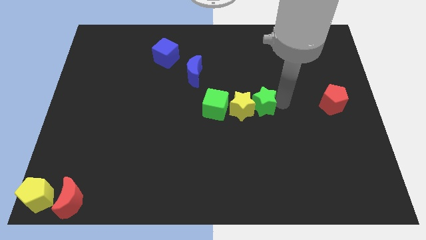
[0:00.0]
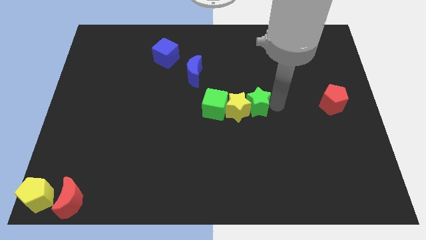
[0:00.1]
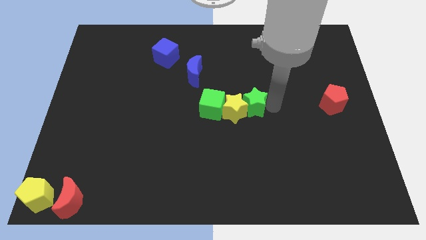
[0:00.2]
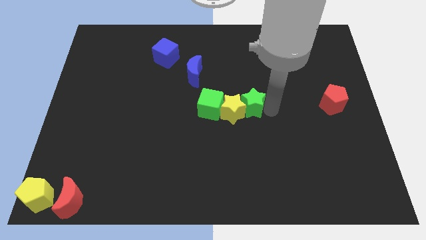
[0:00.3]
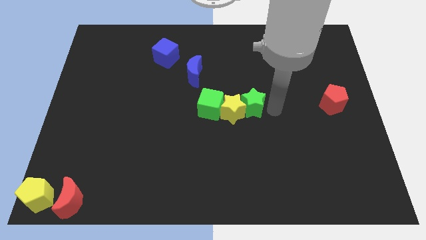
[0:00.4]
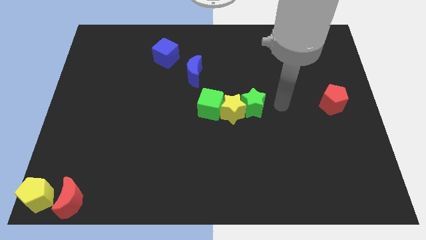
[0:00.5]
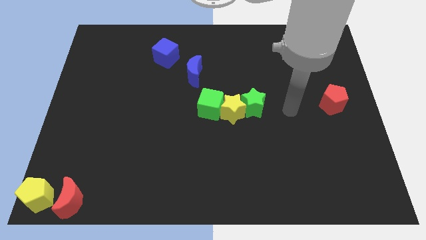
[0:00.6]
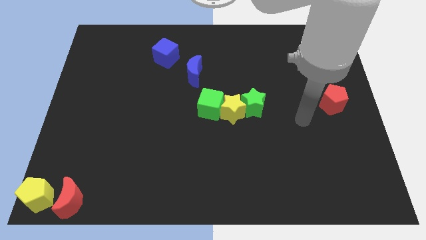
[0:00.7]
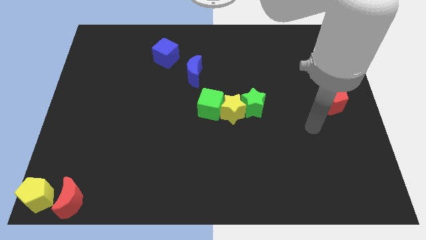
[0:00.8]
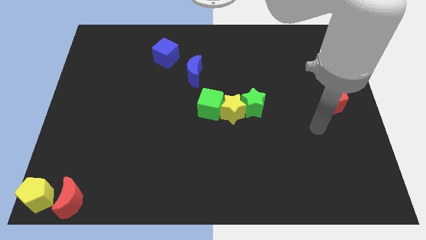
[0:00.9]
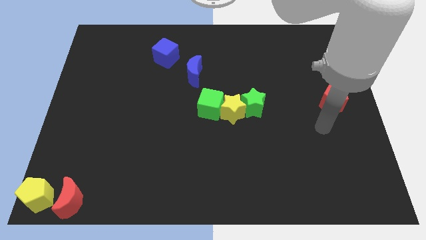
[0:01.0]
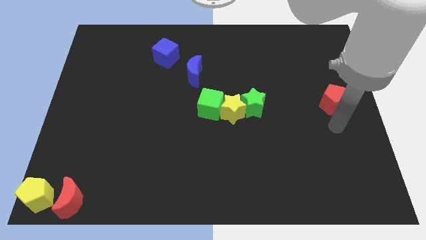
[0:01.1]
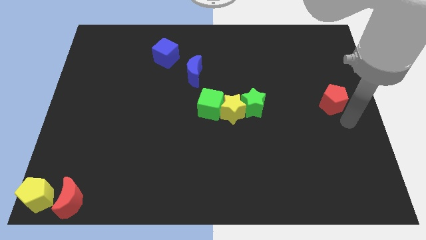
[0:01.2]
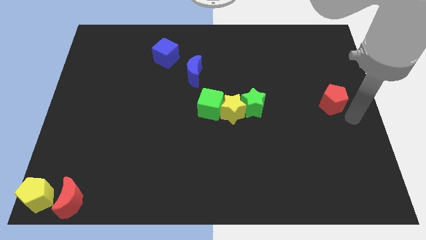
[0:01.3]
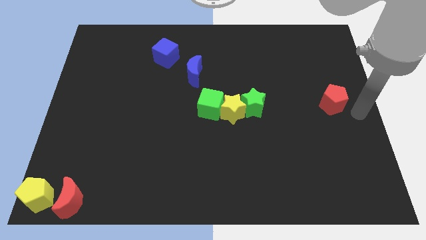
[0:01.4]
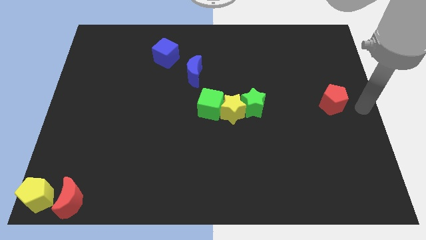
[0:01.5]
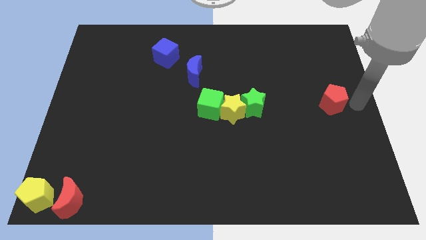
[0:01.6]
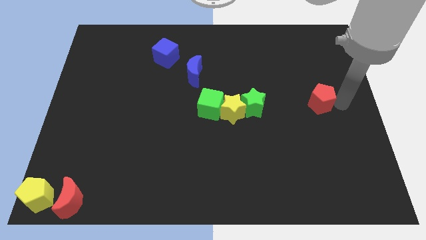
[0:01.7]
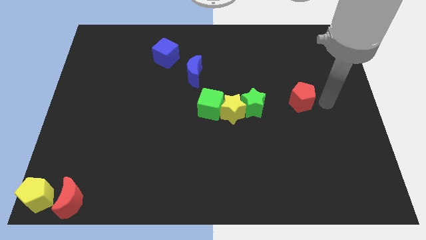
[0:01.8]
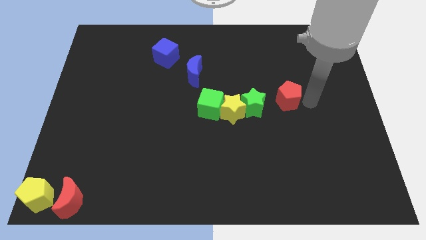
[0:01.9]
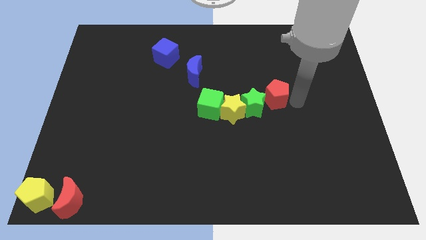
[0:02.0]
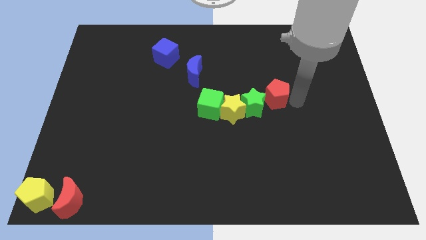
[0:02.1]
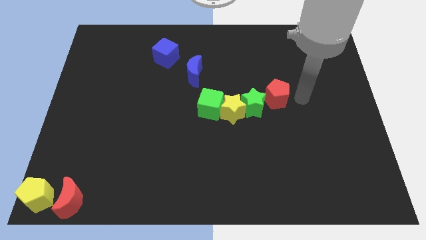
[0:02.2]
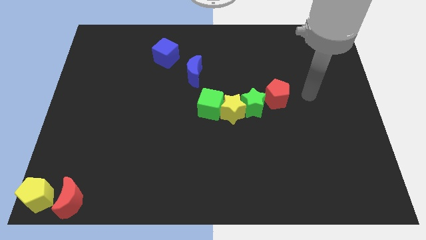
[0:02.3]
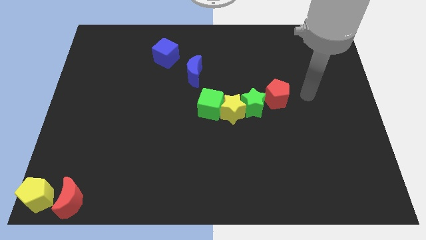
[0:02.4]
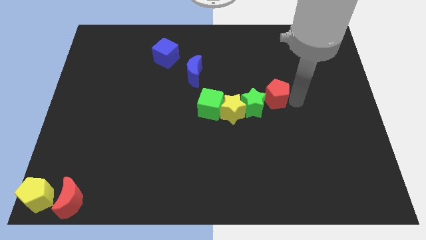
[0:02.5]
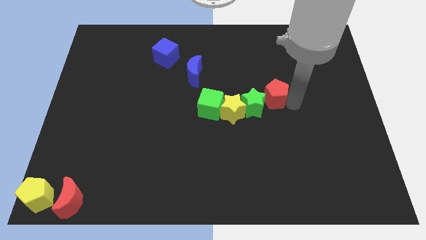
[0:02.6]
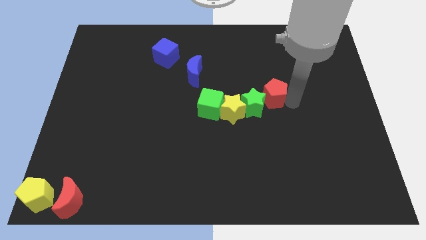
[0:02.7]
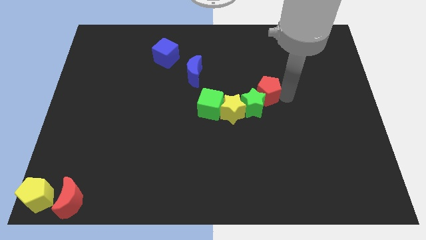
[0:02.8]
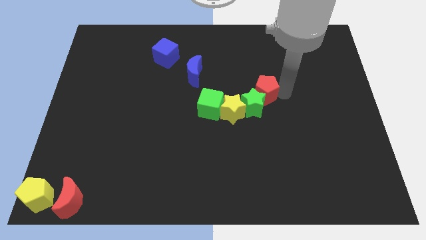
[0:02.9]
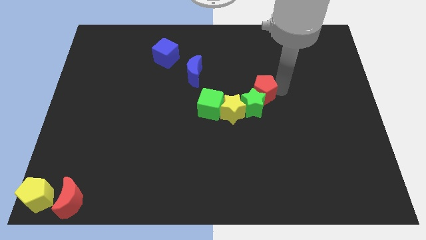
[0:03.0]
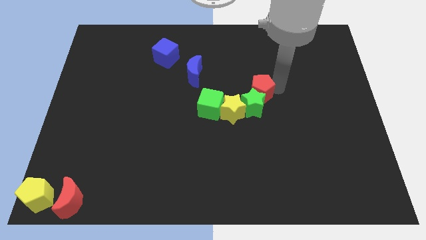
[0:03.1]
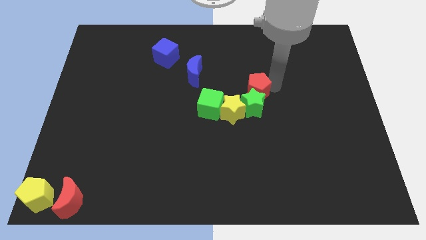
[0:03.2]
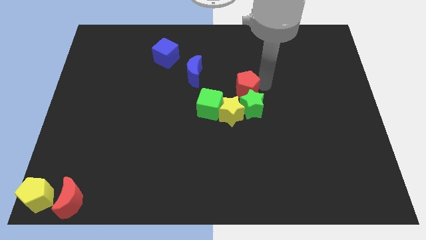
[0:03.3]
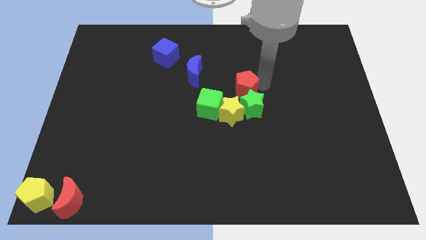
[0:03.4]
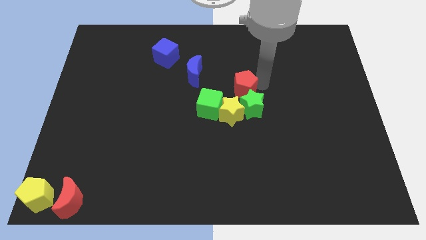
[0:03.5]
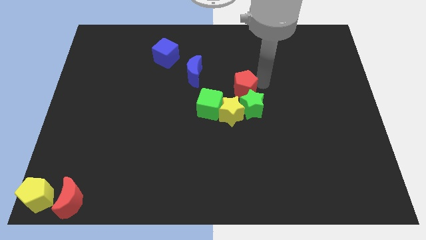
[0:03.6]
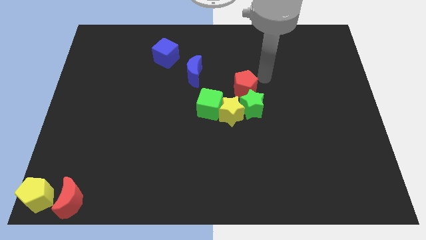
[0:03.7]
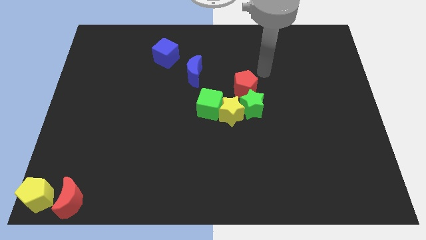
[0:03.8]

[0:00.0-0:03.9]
move the red pentagon on top of the green star

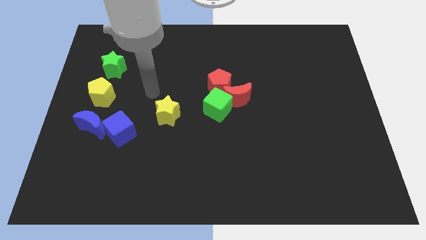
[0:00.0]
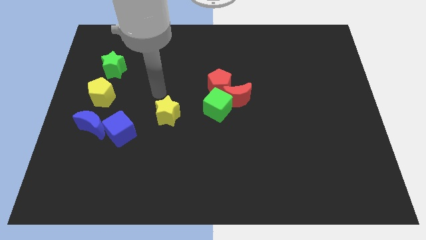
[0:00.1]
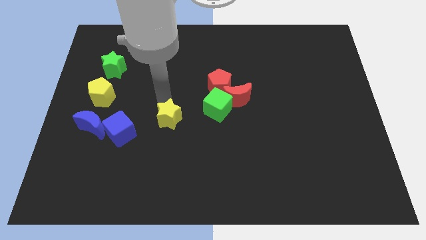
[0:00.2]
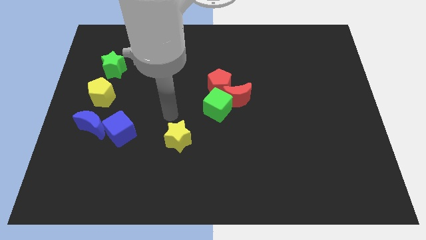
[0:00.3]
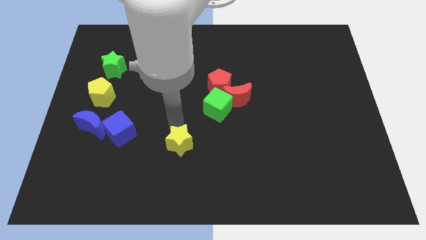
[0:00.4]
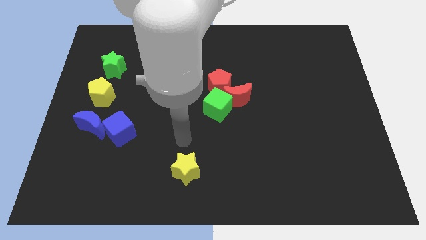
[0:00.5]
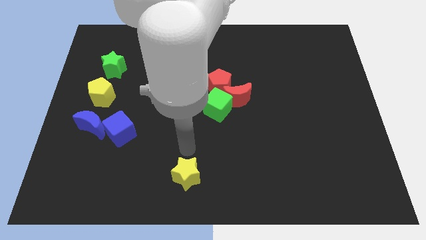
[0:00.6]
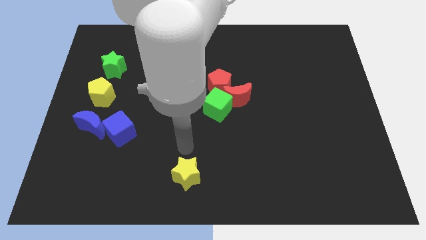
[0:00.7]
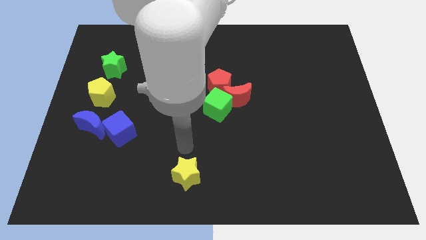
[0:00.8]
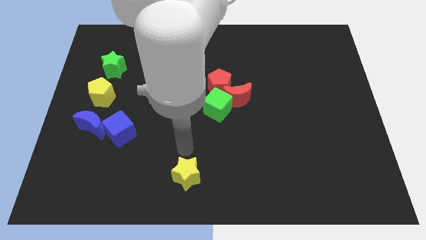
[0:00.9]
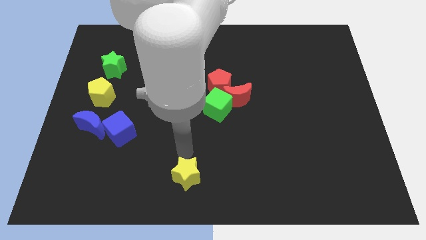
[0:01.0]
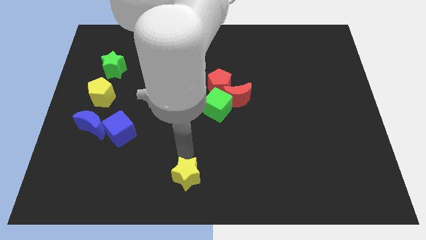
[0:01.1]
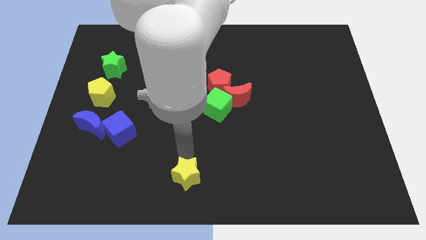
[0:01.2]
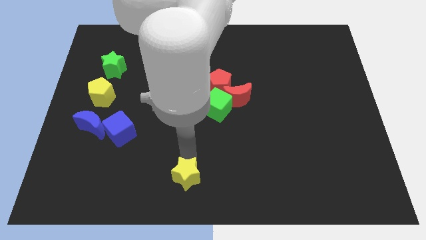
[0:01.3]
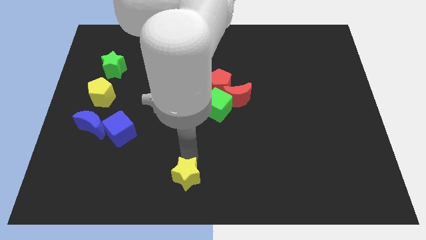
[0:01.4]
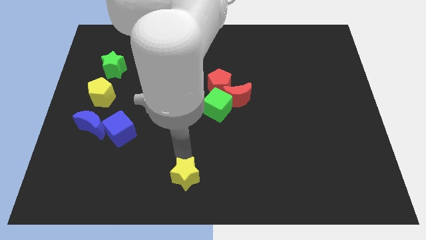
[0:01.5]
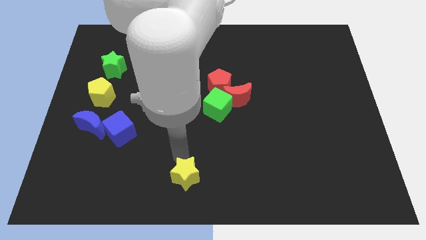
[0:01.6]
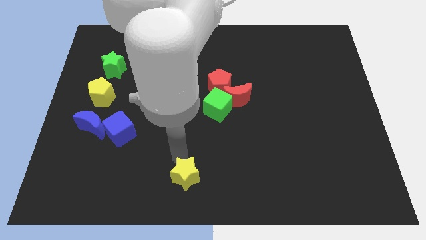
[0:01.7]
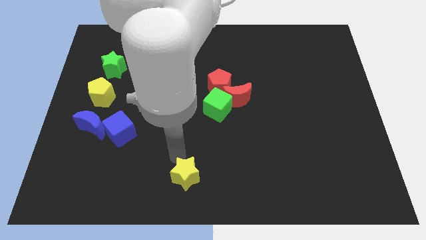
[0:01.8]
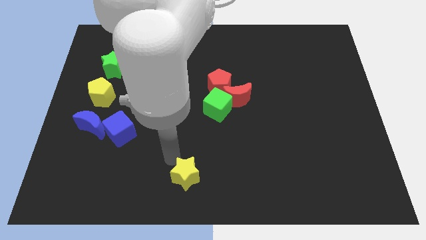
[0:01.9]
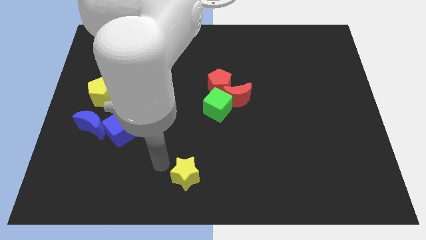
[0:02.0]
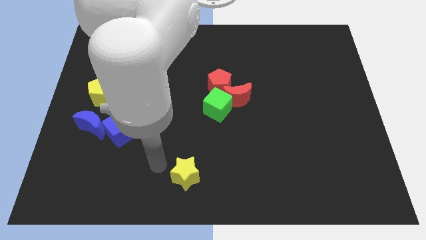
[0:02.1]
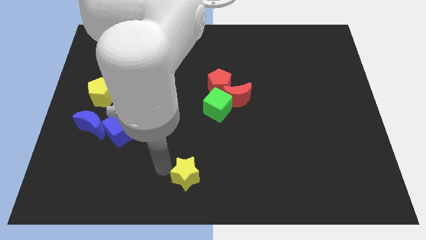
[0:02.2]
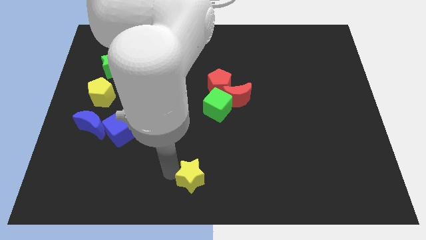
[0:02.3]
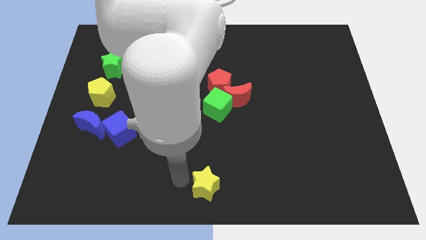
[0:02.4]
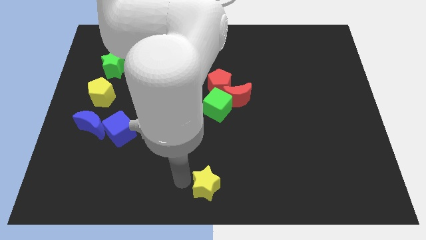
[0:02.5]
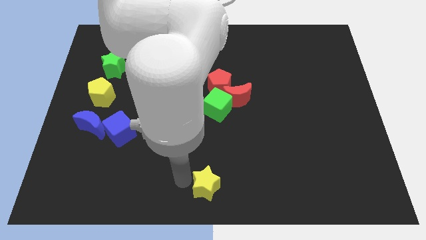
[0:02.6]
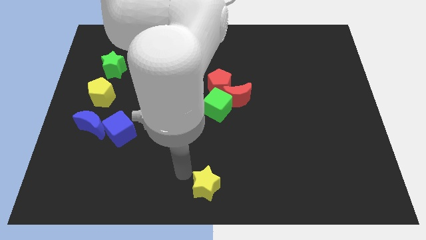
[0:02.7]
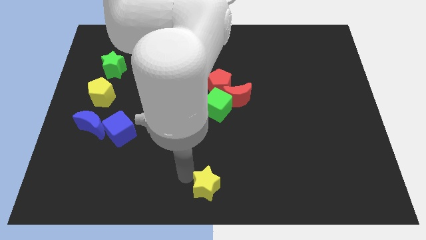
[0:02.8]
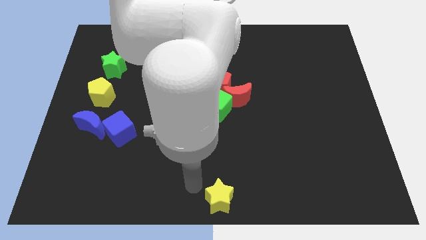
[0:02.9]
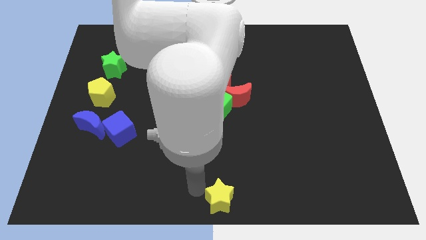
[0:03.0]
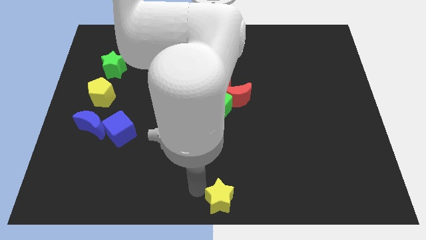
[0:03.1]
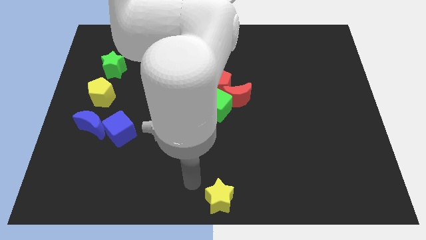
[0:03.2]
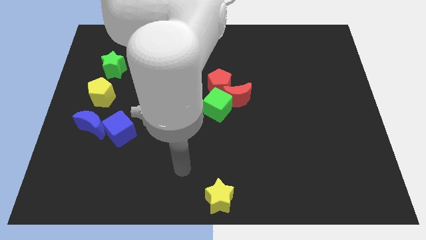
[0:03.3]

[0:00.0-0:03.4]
move the yellow star towards the bottom center of the board

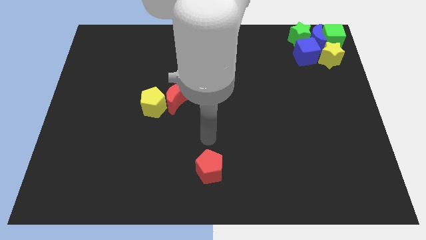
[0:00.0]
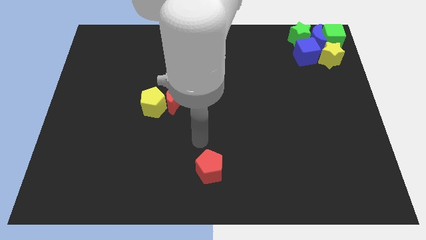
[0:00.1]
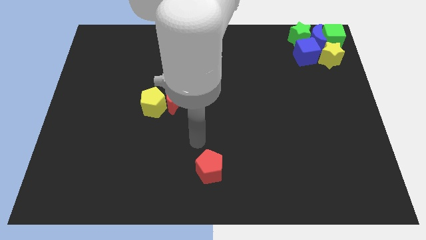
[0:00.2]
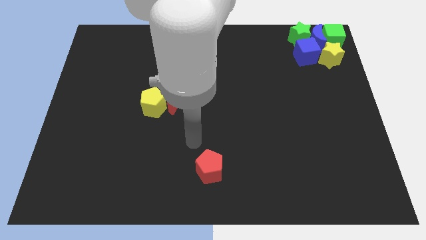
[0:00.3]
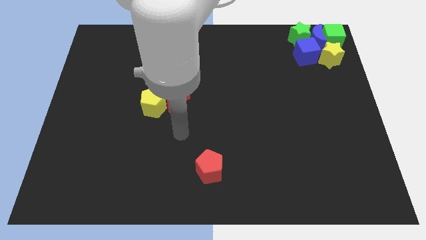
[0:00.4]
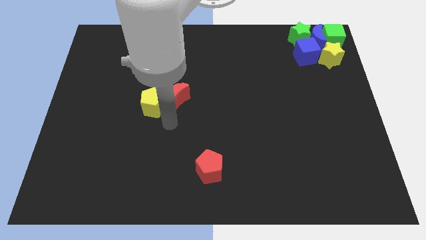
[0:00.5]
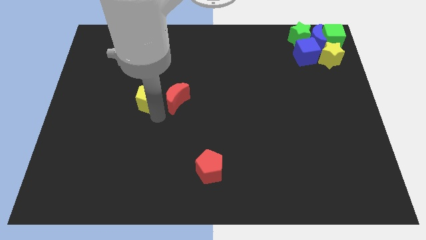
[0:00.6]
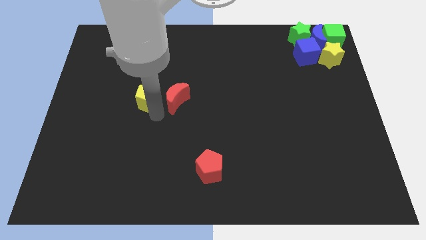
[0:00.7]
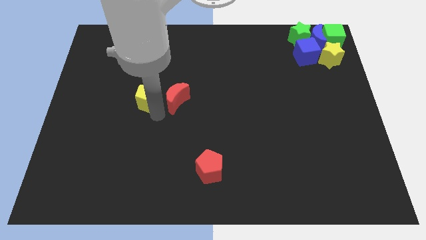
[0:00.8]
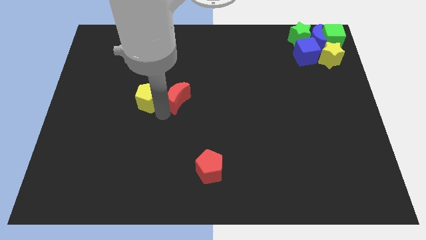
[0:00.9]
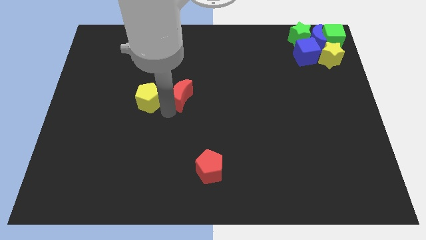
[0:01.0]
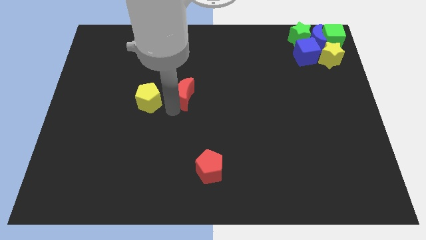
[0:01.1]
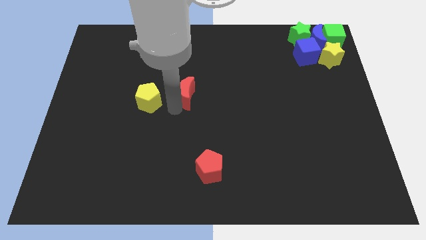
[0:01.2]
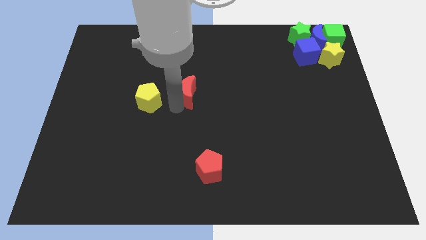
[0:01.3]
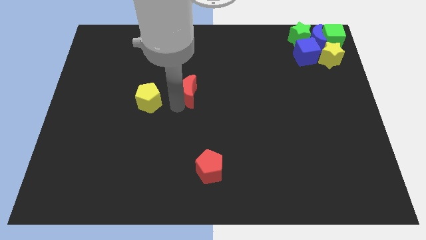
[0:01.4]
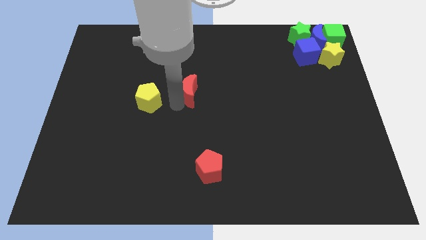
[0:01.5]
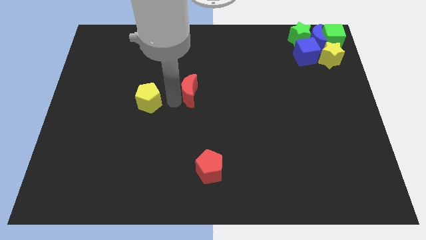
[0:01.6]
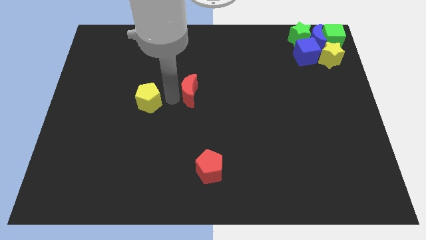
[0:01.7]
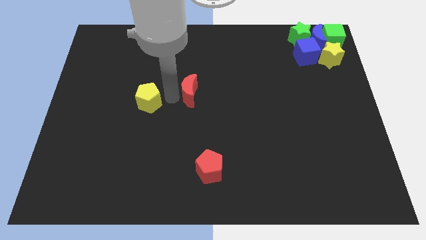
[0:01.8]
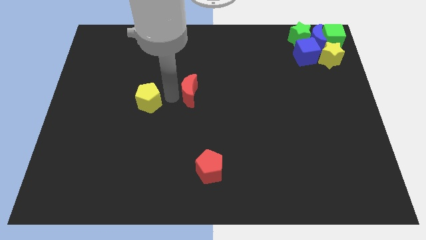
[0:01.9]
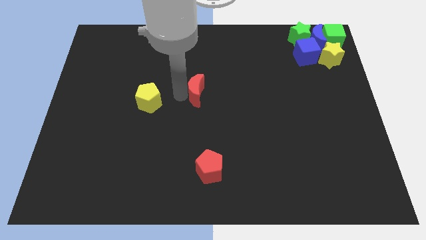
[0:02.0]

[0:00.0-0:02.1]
separate the yellow pentagon and red moon
